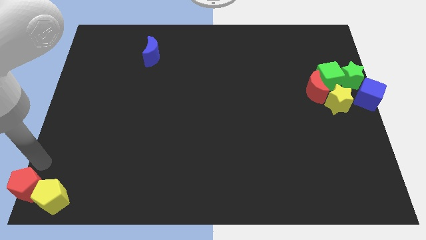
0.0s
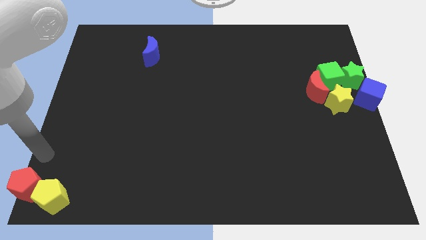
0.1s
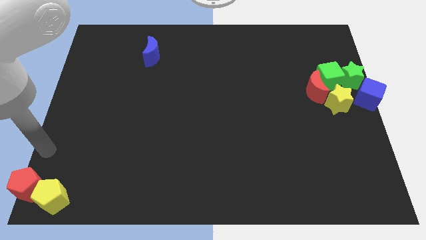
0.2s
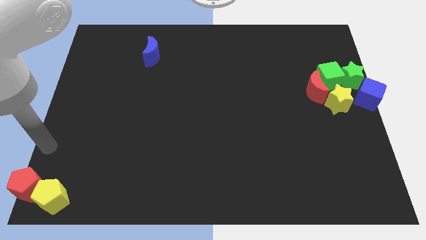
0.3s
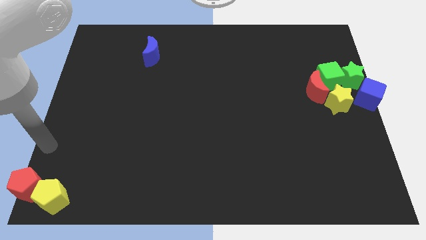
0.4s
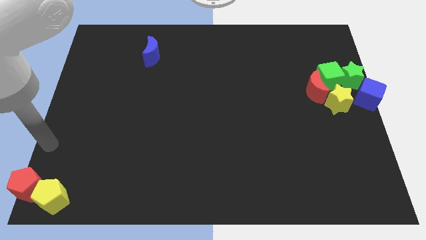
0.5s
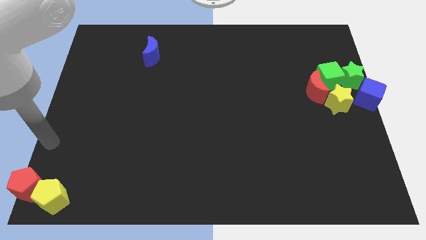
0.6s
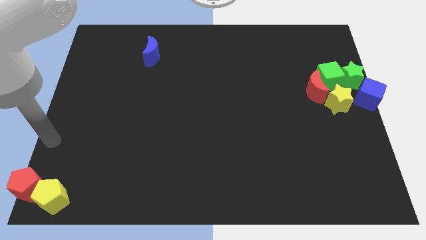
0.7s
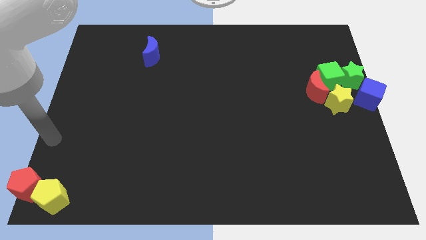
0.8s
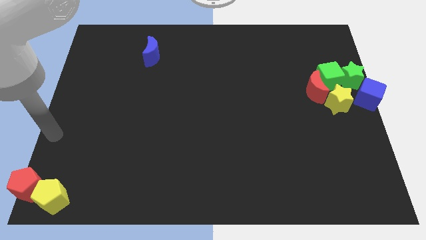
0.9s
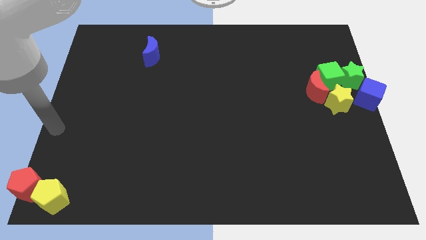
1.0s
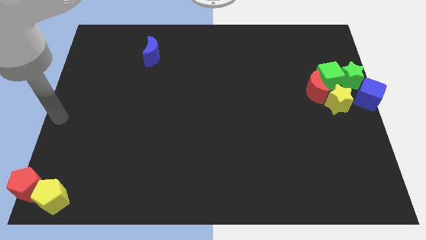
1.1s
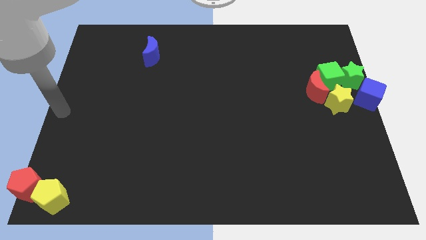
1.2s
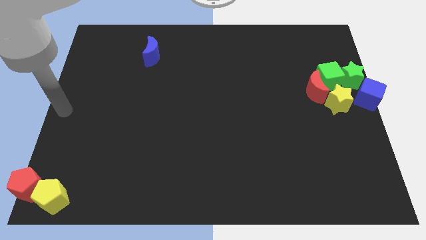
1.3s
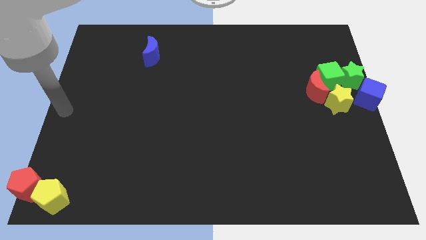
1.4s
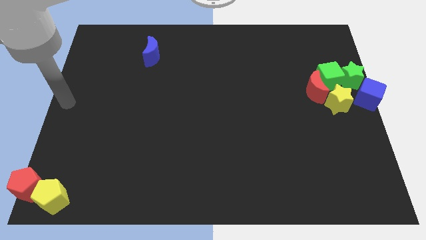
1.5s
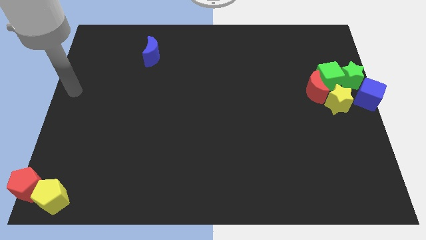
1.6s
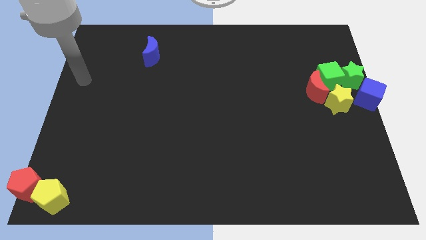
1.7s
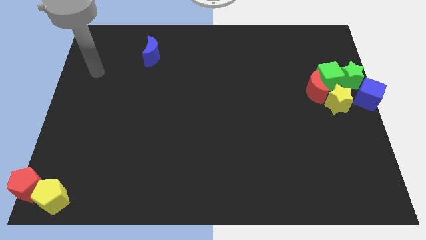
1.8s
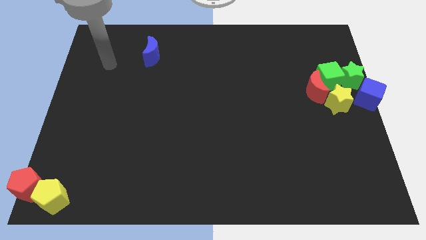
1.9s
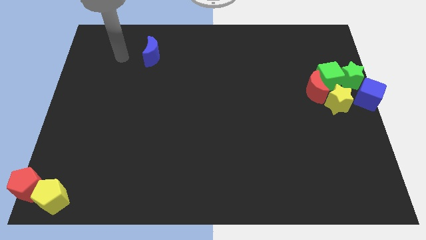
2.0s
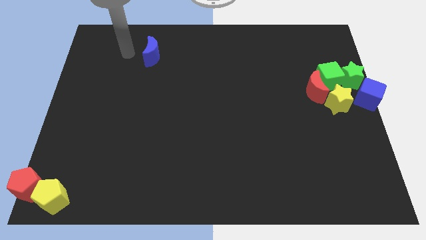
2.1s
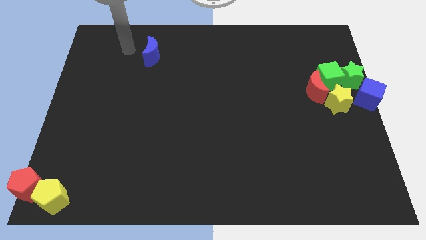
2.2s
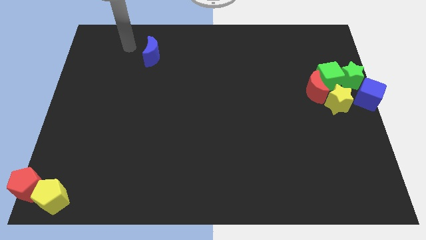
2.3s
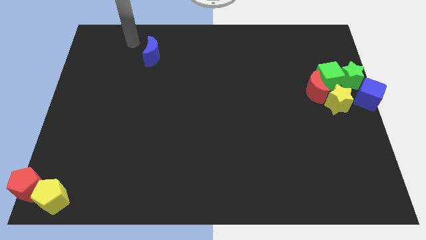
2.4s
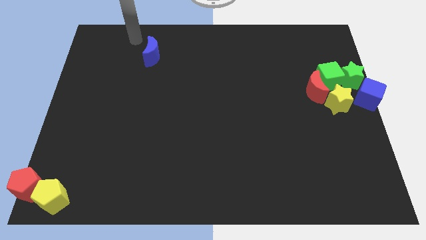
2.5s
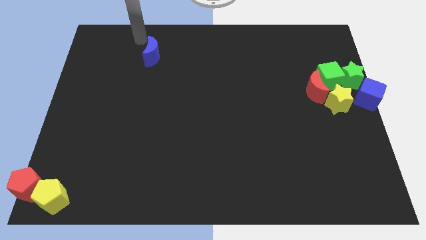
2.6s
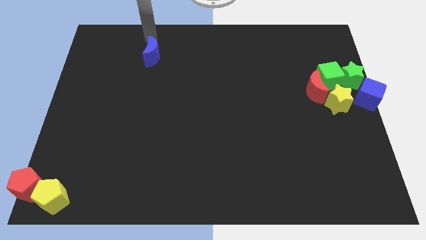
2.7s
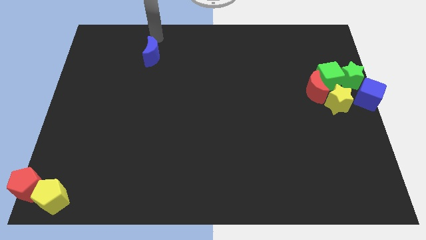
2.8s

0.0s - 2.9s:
move your arm above the blue crescent

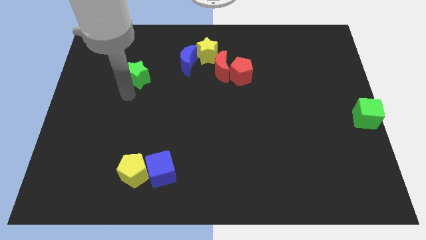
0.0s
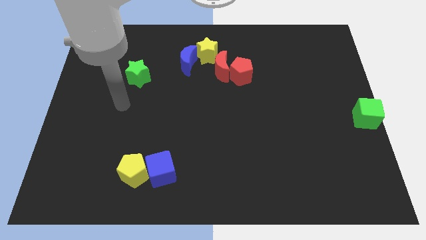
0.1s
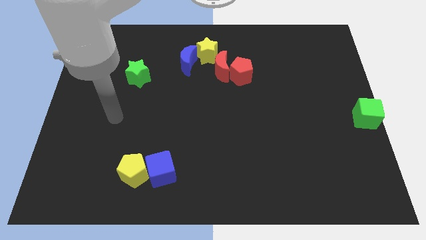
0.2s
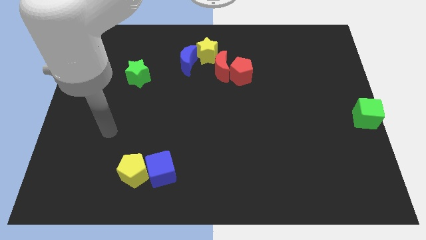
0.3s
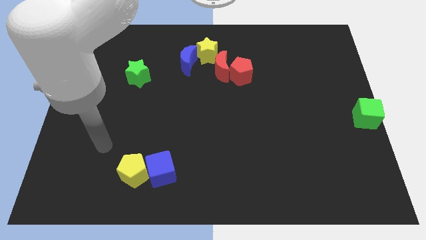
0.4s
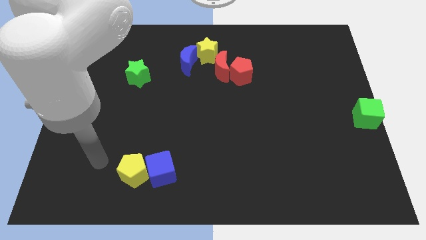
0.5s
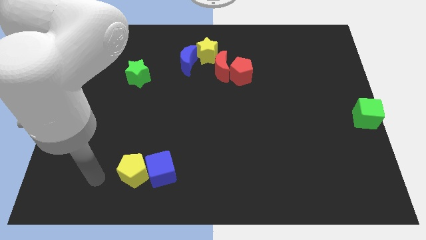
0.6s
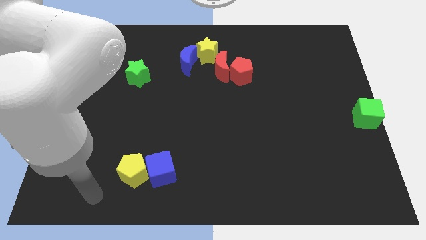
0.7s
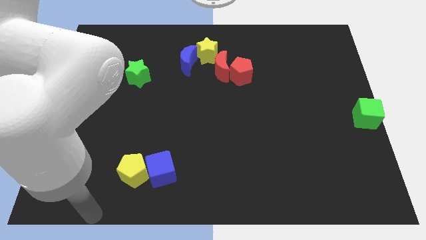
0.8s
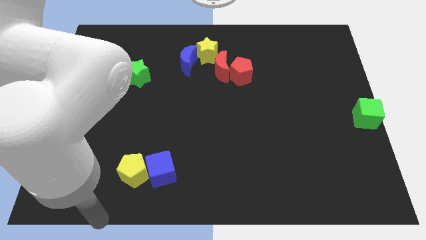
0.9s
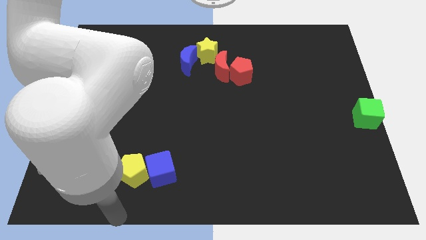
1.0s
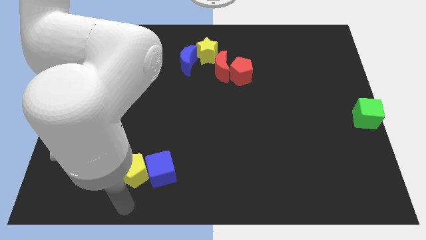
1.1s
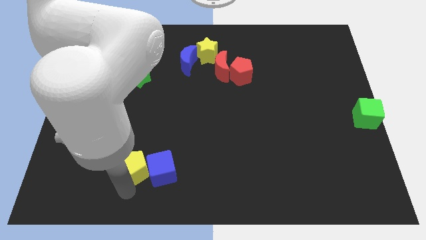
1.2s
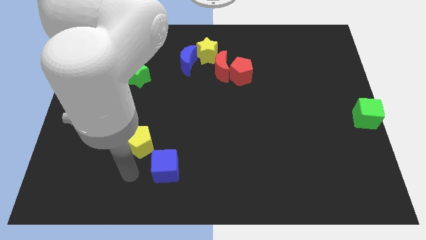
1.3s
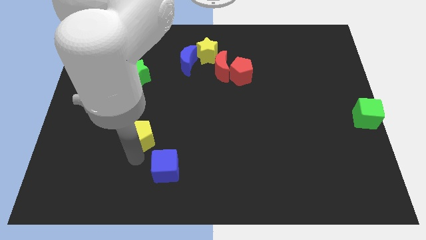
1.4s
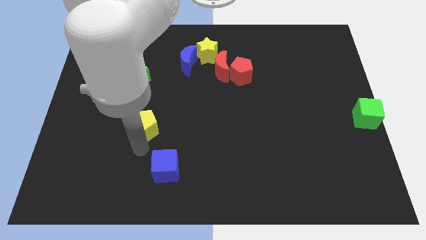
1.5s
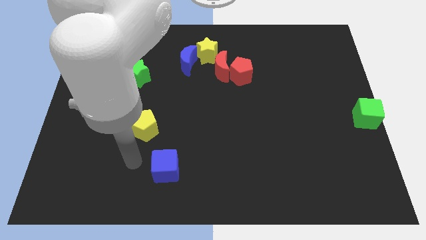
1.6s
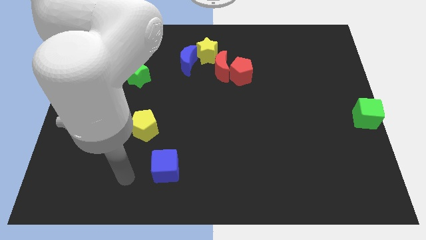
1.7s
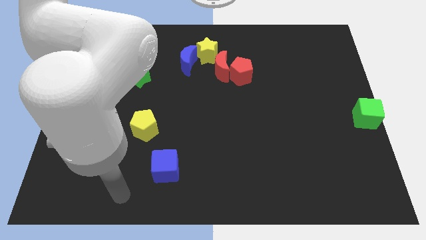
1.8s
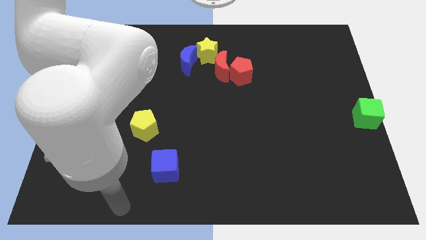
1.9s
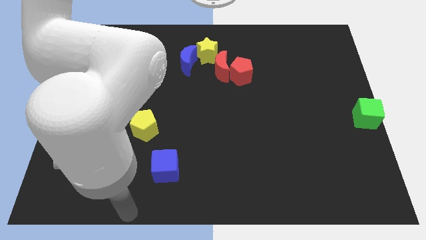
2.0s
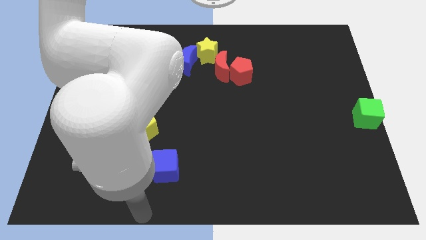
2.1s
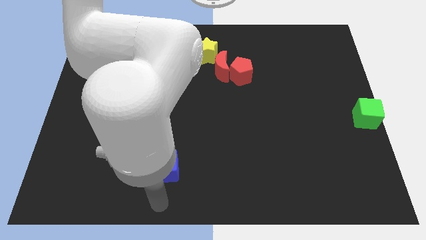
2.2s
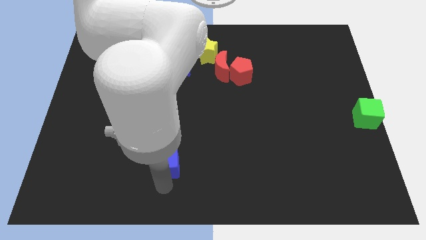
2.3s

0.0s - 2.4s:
go and separate the yellow pentagon and the blue cube

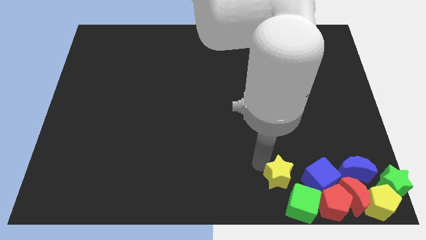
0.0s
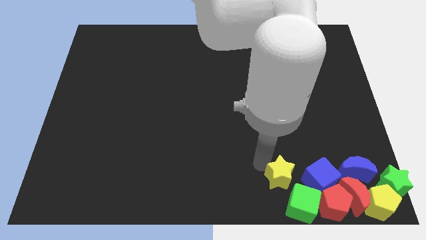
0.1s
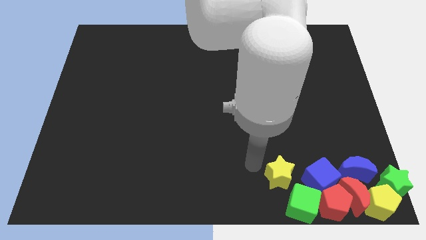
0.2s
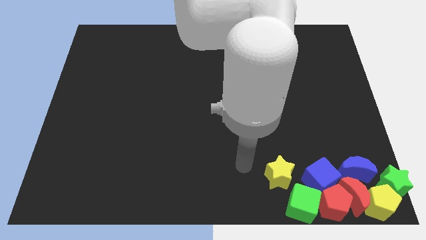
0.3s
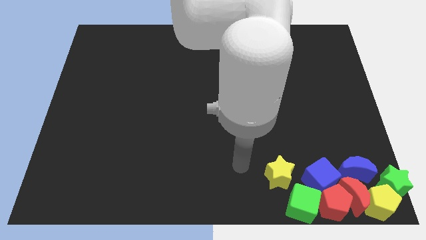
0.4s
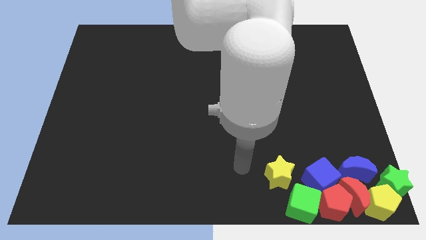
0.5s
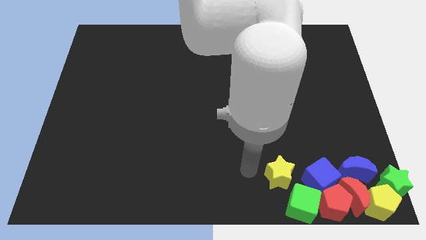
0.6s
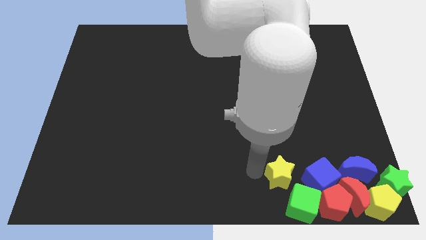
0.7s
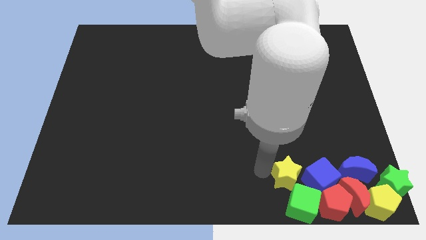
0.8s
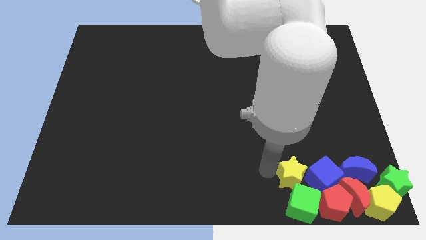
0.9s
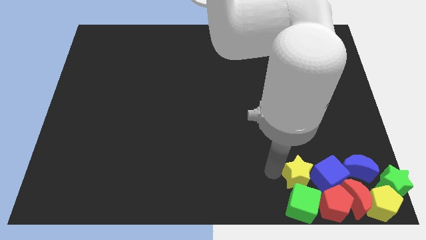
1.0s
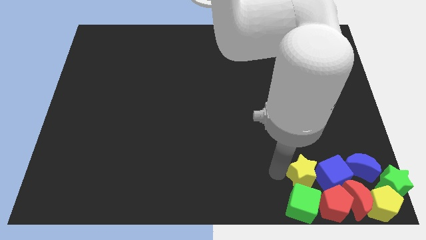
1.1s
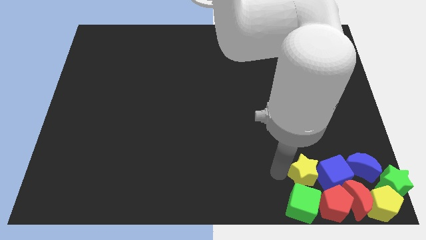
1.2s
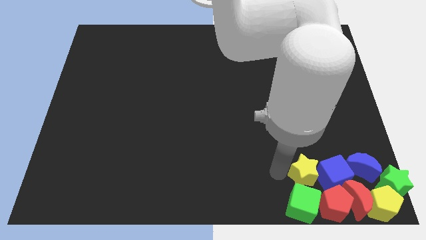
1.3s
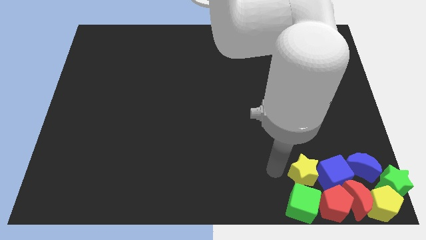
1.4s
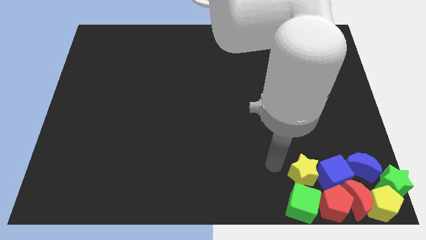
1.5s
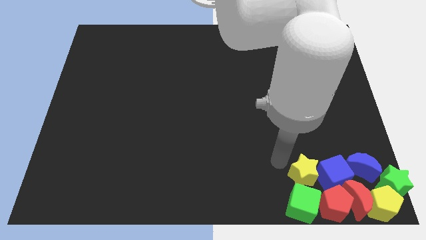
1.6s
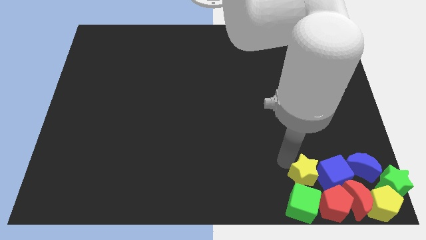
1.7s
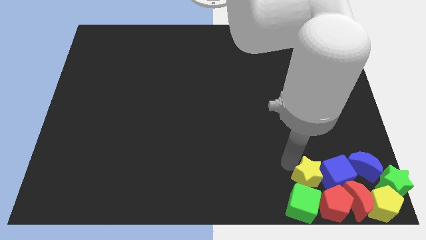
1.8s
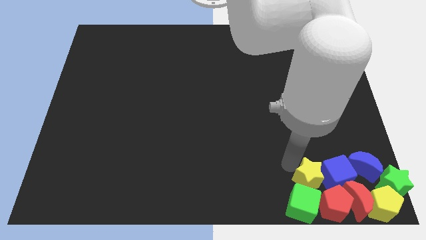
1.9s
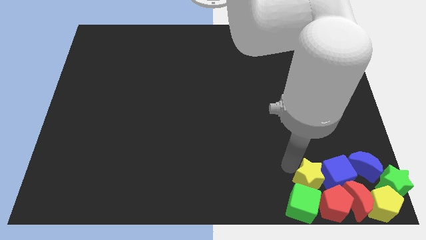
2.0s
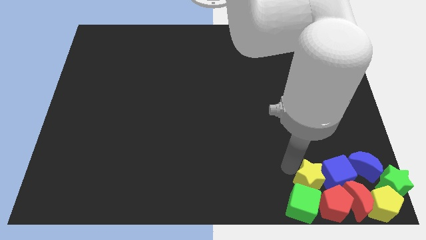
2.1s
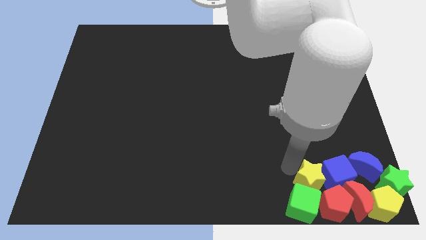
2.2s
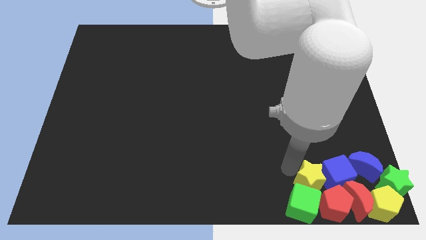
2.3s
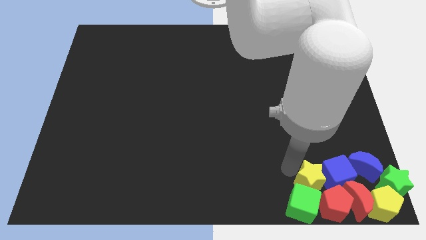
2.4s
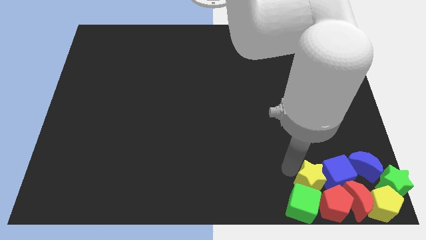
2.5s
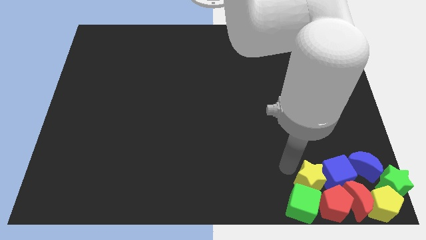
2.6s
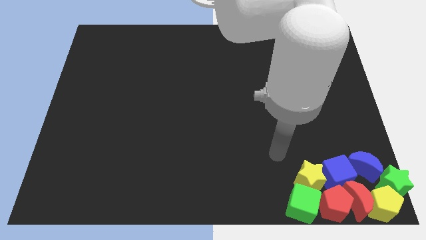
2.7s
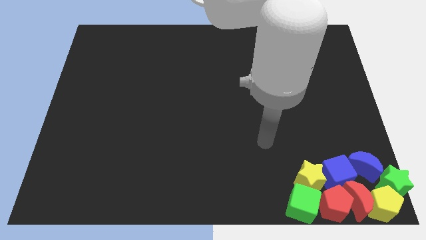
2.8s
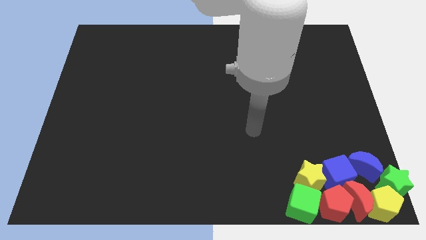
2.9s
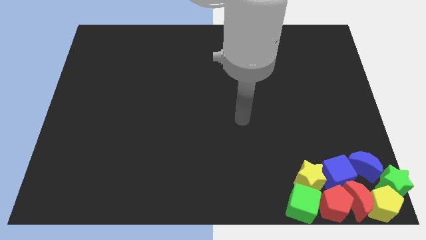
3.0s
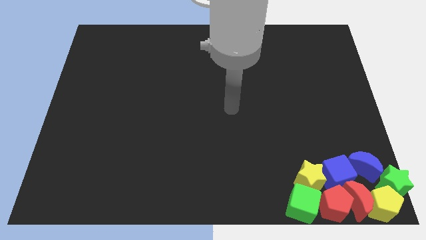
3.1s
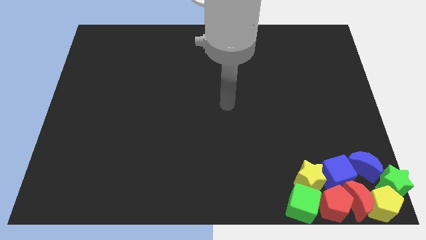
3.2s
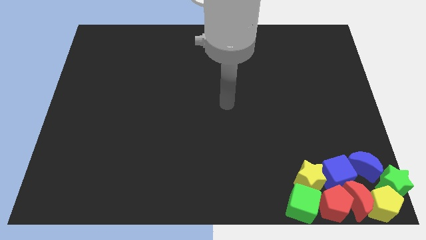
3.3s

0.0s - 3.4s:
push yellow star into the group of blocks

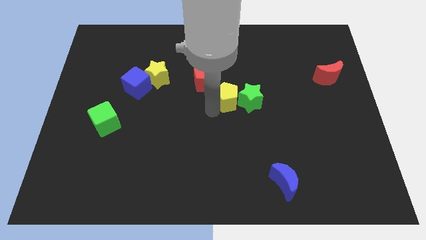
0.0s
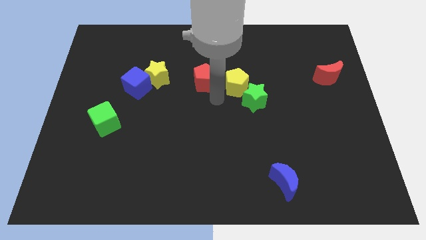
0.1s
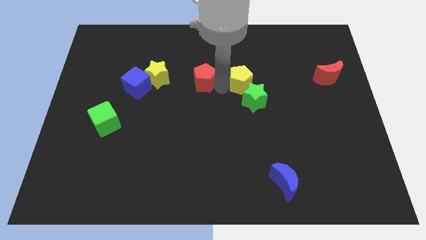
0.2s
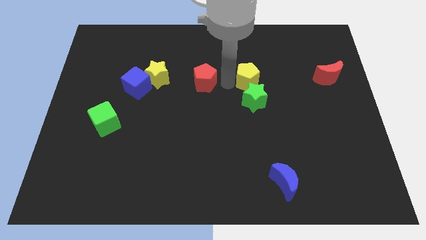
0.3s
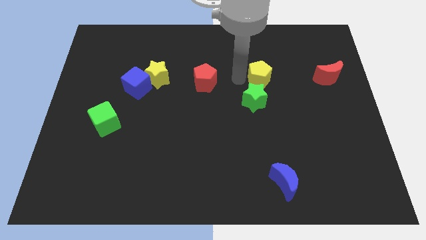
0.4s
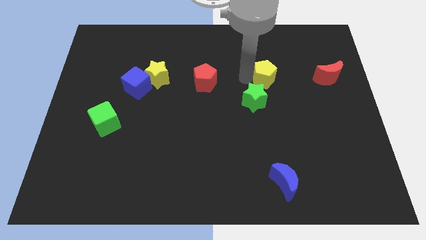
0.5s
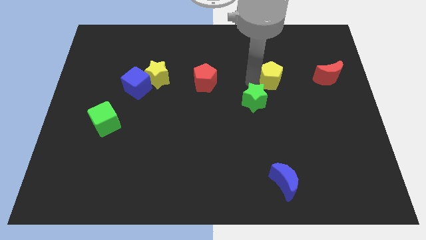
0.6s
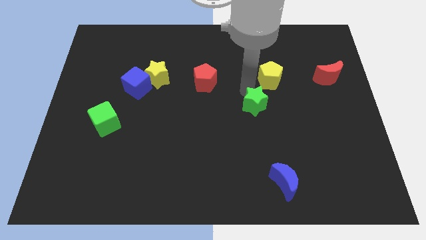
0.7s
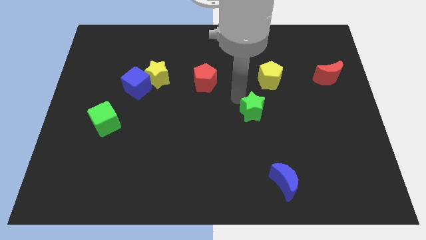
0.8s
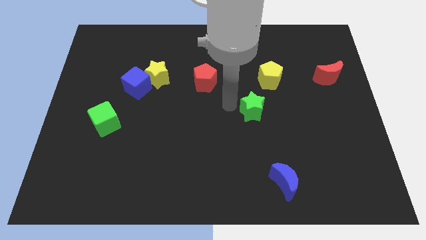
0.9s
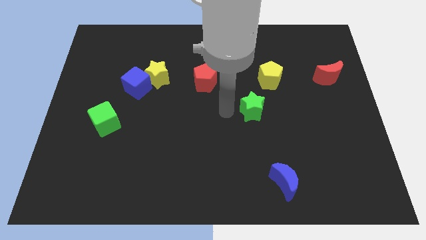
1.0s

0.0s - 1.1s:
push the green star and yellow pentagon in opposite directions
